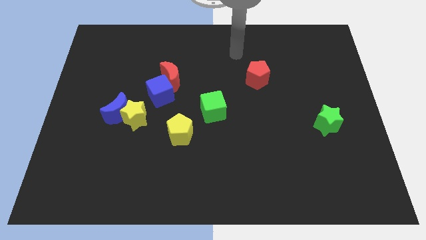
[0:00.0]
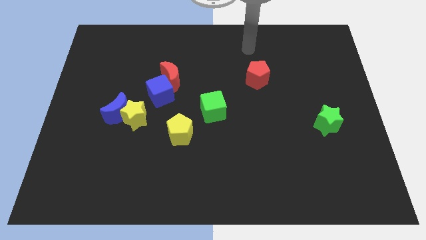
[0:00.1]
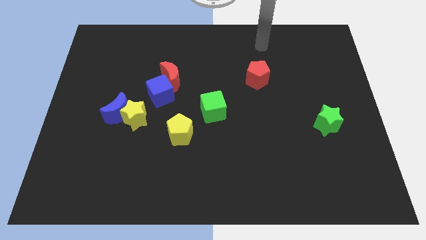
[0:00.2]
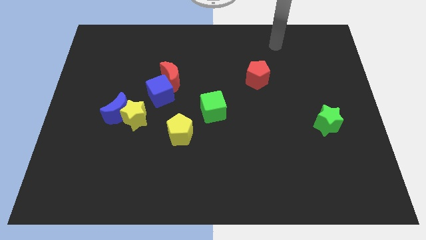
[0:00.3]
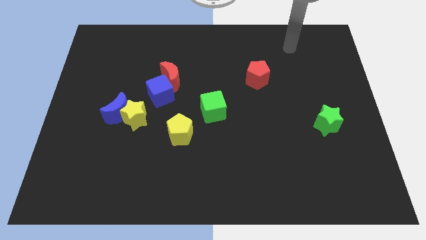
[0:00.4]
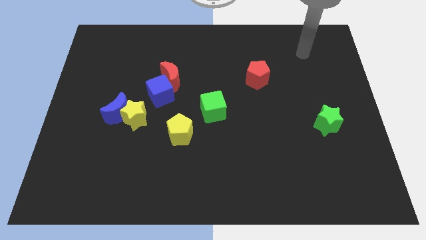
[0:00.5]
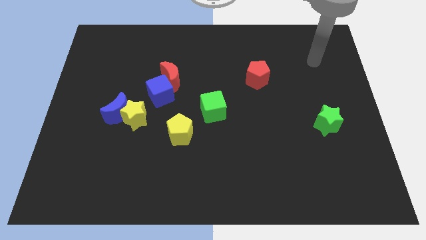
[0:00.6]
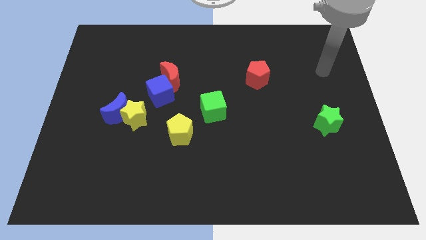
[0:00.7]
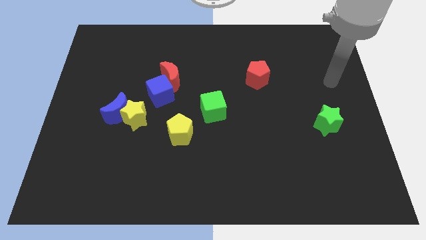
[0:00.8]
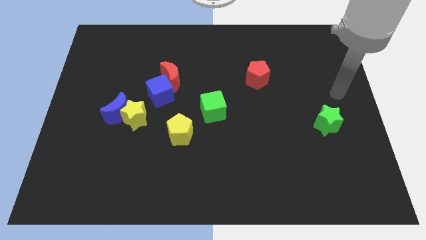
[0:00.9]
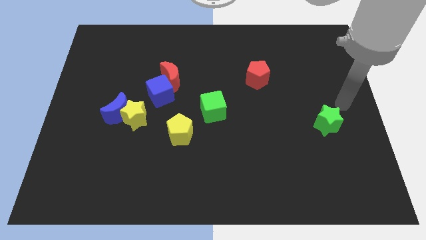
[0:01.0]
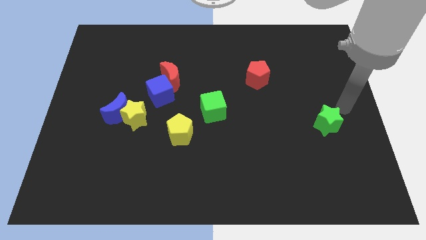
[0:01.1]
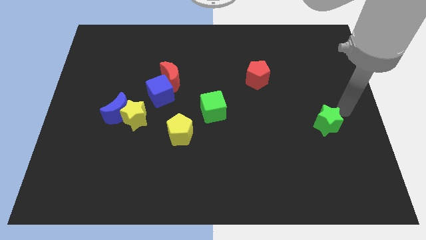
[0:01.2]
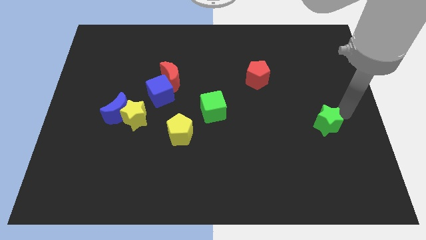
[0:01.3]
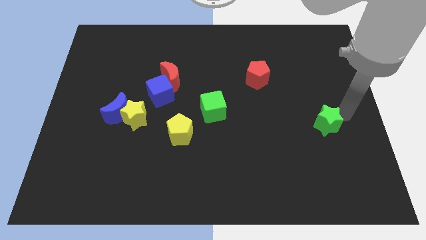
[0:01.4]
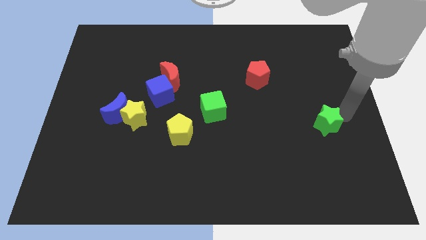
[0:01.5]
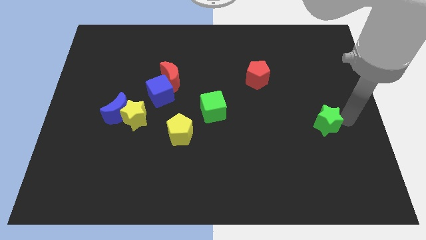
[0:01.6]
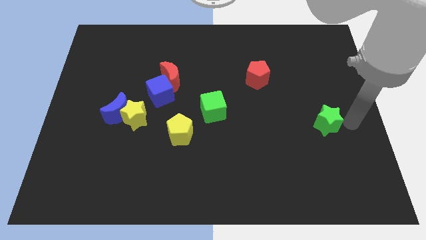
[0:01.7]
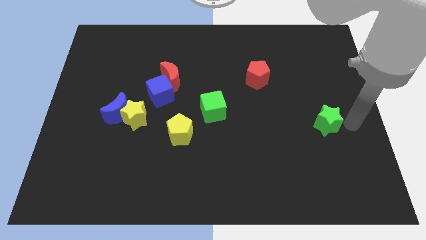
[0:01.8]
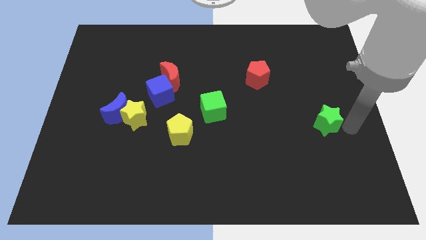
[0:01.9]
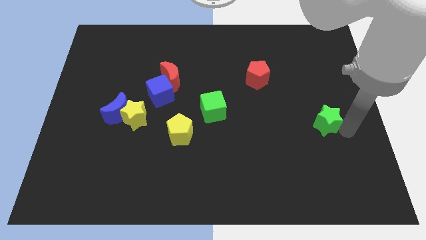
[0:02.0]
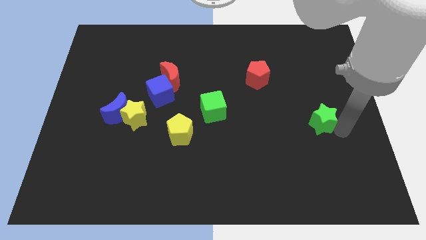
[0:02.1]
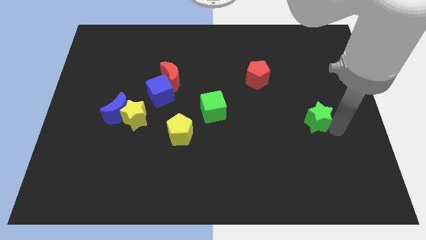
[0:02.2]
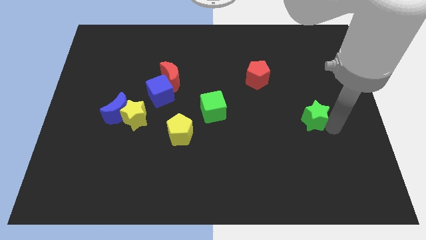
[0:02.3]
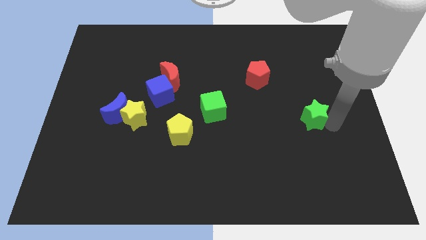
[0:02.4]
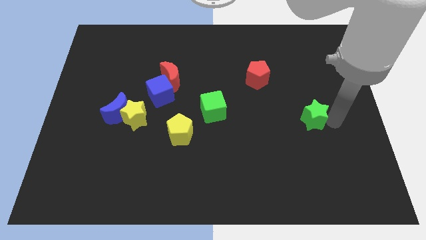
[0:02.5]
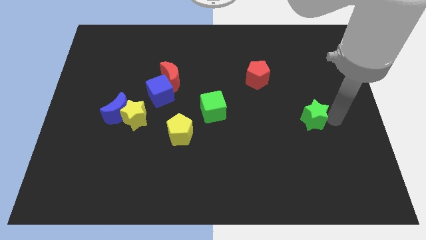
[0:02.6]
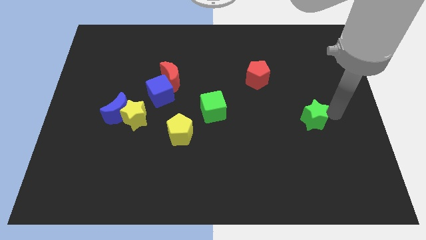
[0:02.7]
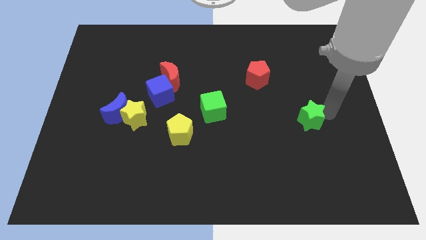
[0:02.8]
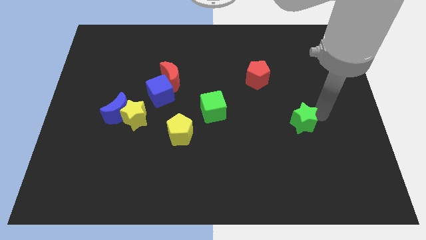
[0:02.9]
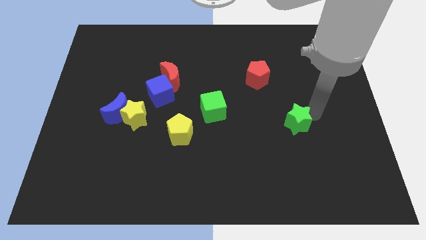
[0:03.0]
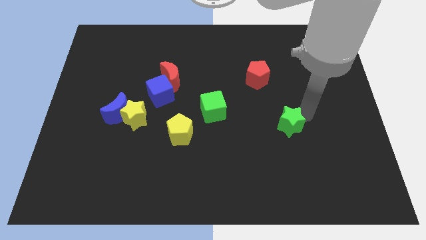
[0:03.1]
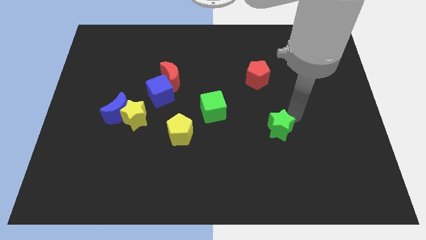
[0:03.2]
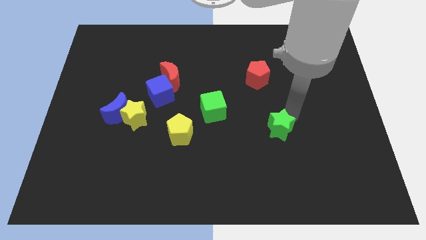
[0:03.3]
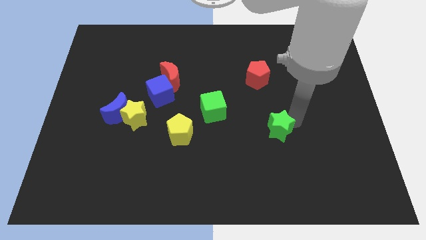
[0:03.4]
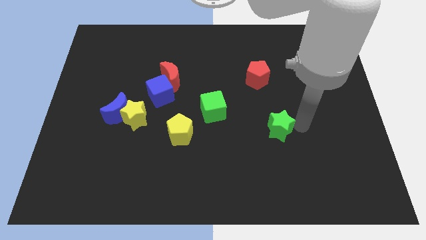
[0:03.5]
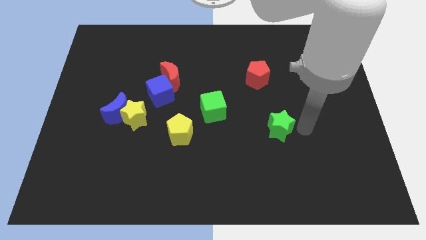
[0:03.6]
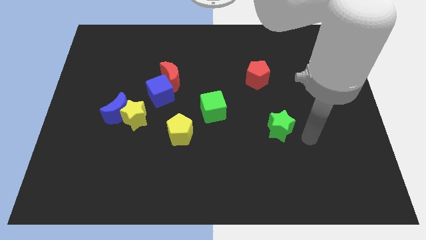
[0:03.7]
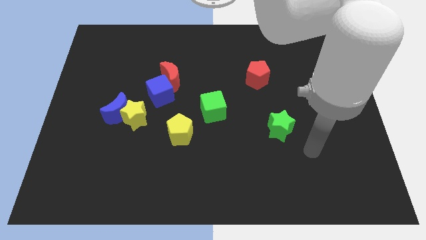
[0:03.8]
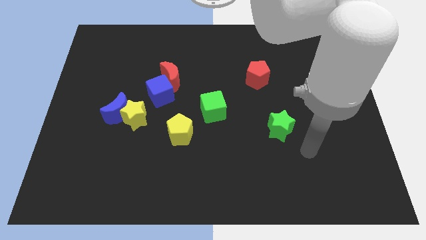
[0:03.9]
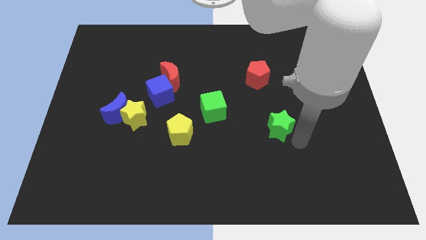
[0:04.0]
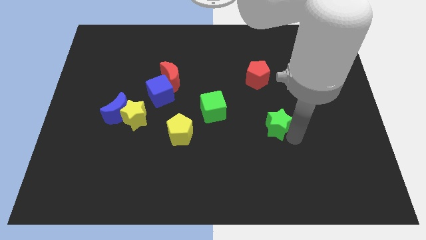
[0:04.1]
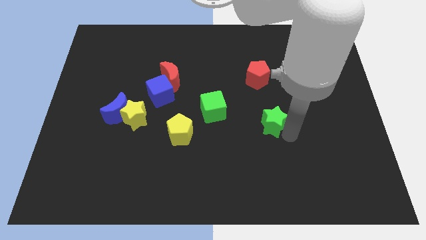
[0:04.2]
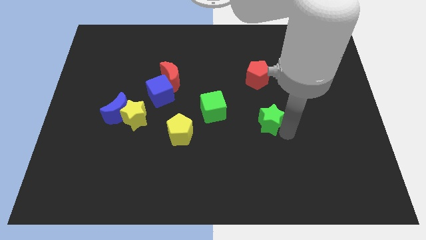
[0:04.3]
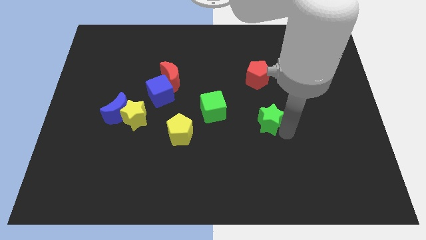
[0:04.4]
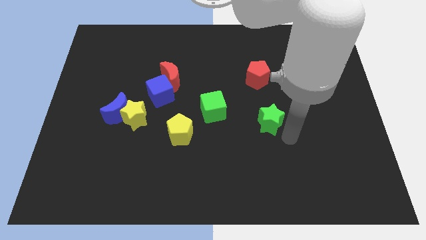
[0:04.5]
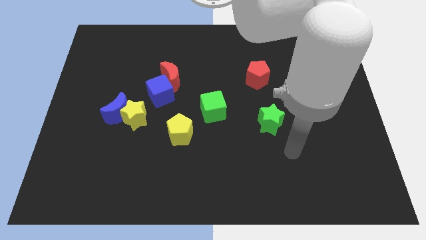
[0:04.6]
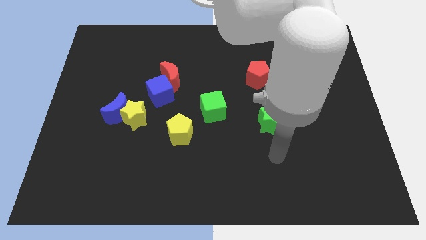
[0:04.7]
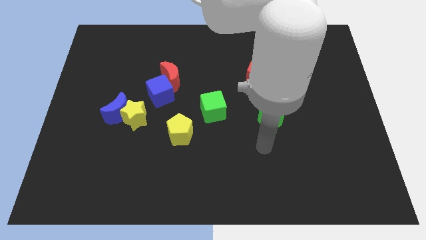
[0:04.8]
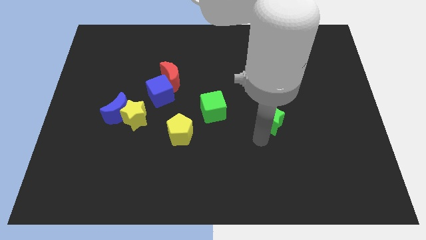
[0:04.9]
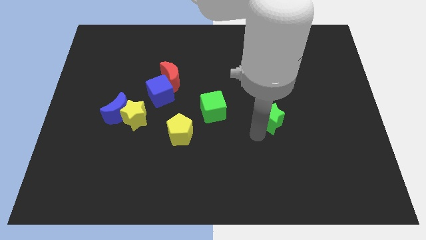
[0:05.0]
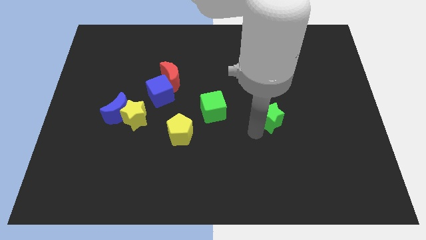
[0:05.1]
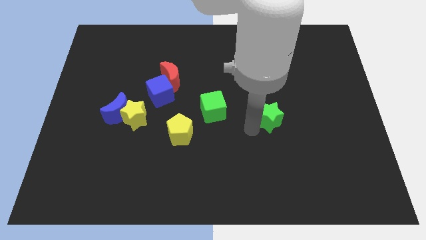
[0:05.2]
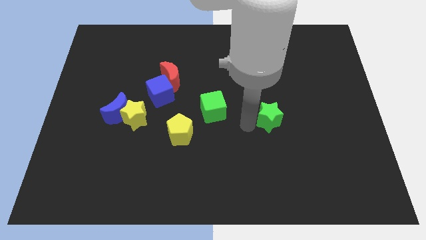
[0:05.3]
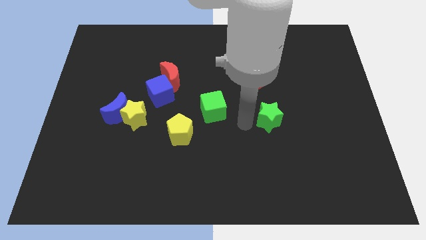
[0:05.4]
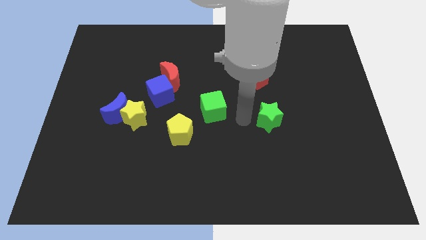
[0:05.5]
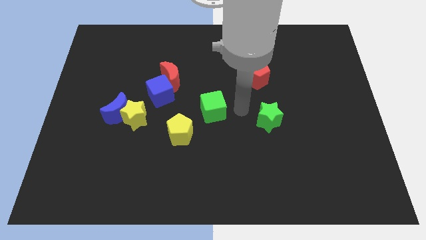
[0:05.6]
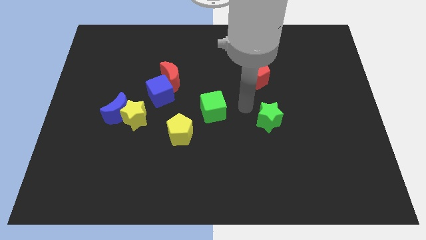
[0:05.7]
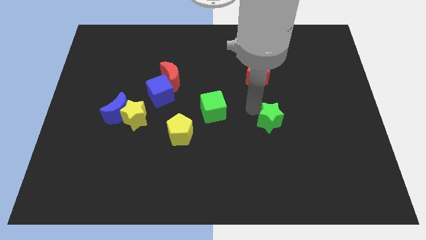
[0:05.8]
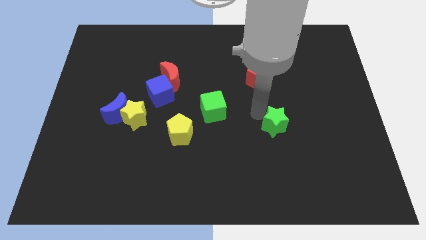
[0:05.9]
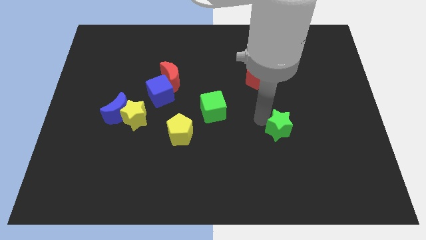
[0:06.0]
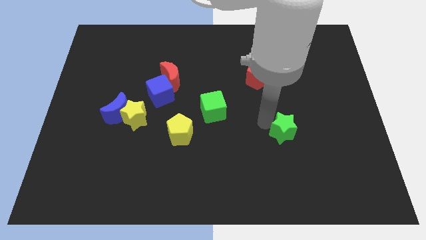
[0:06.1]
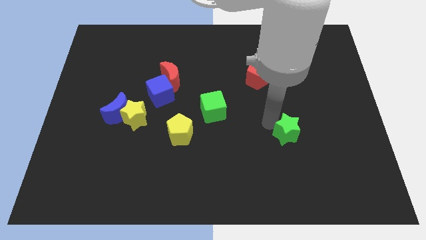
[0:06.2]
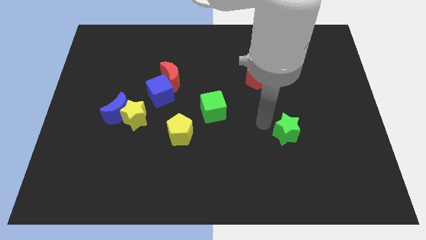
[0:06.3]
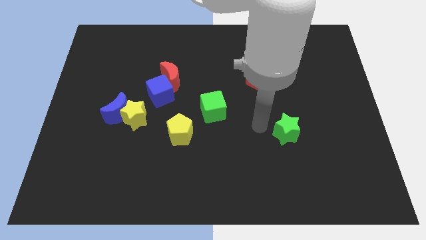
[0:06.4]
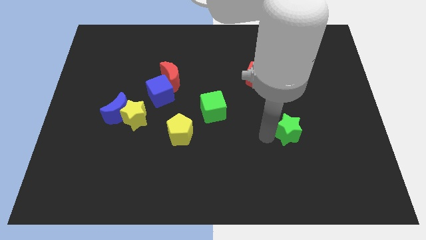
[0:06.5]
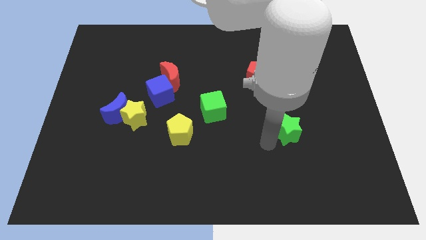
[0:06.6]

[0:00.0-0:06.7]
place the green star to the right of the yellow pentagon

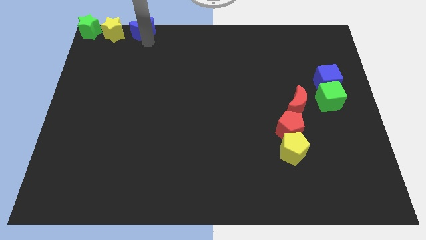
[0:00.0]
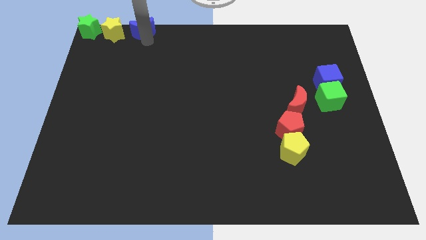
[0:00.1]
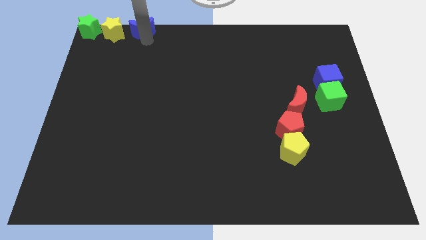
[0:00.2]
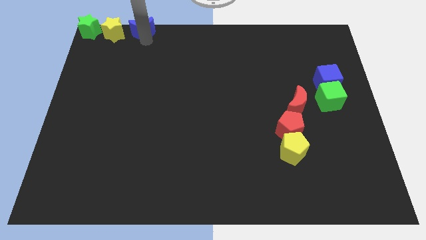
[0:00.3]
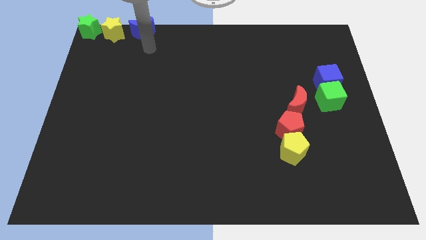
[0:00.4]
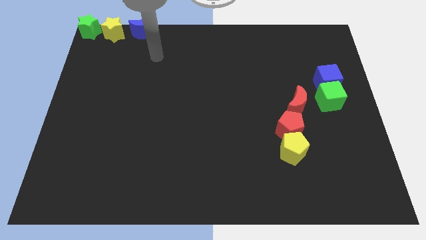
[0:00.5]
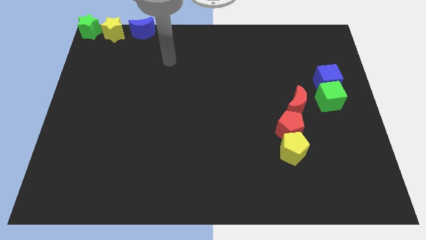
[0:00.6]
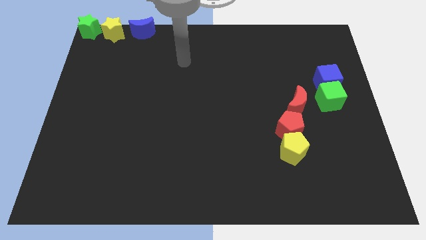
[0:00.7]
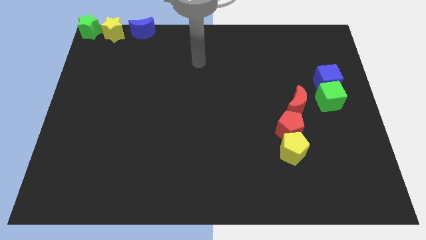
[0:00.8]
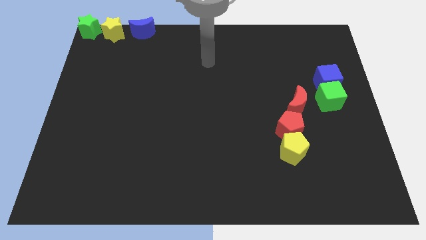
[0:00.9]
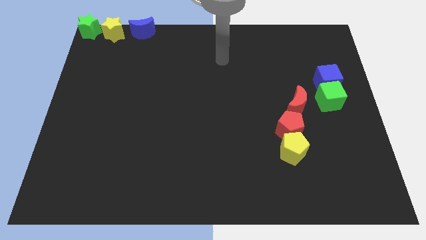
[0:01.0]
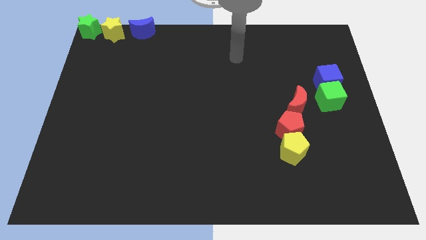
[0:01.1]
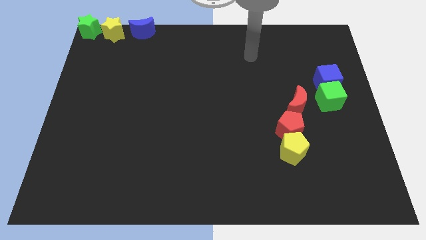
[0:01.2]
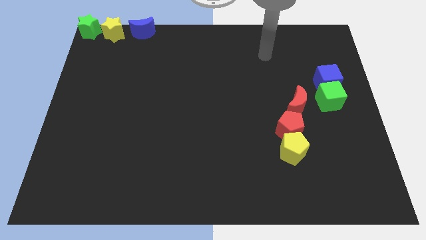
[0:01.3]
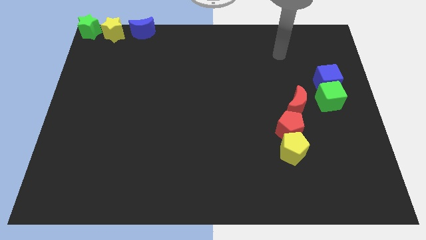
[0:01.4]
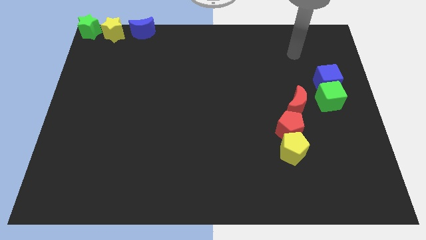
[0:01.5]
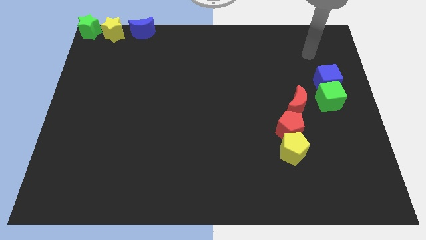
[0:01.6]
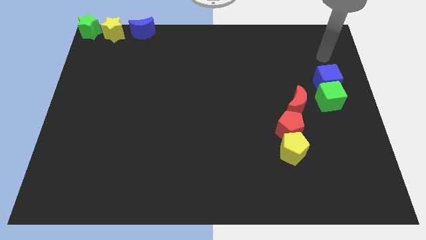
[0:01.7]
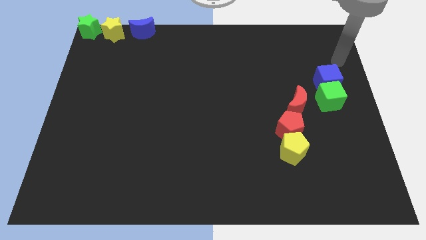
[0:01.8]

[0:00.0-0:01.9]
move your hand to the top of the blue cube

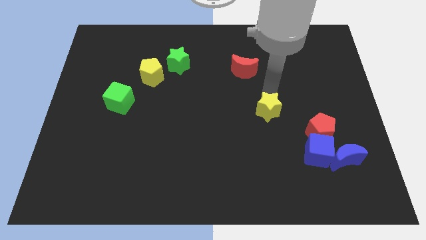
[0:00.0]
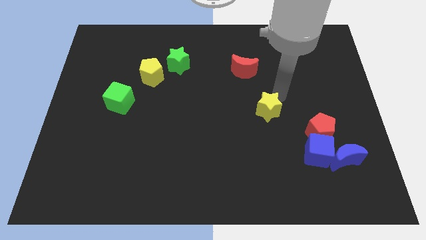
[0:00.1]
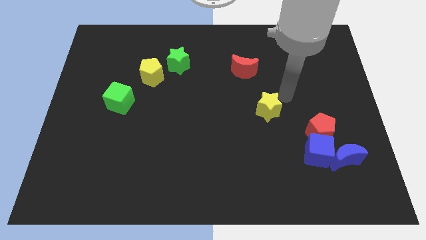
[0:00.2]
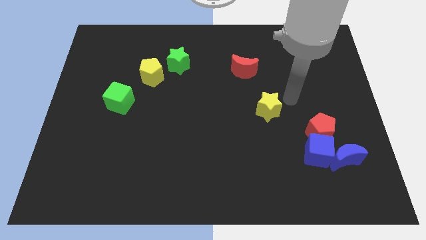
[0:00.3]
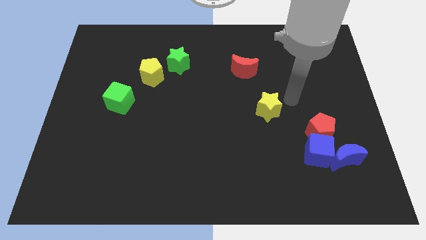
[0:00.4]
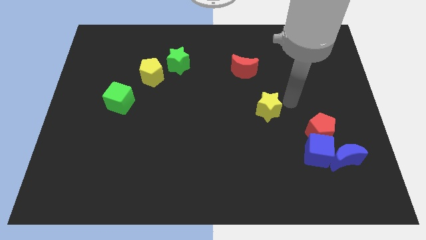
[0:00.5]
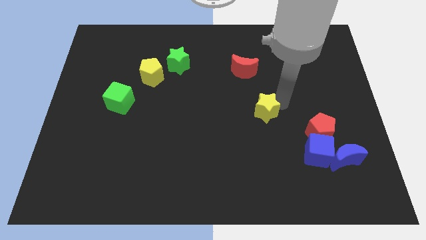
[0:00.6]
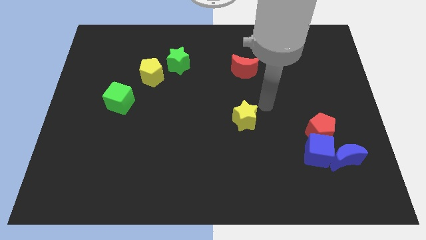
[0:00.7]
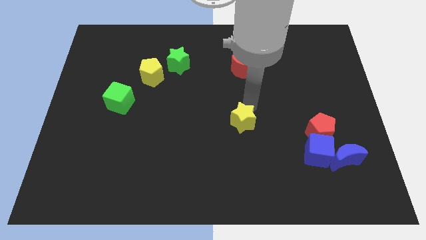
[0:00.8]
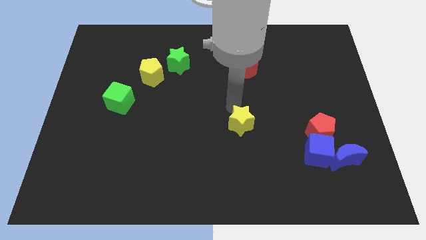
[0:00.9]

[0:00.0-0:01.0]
place the yellow star below the red pentagon
